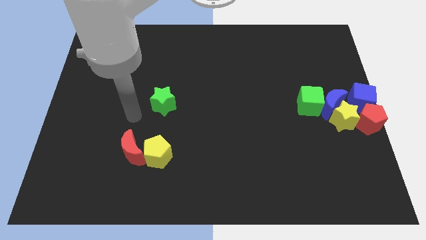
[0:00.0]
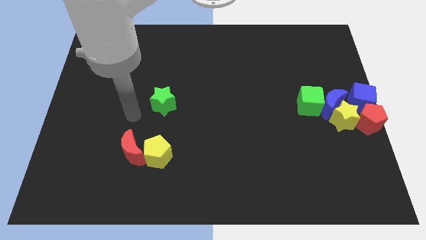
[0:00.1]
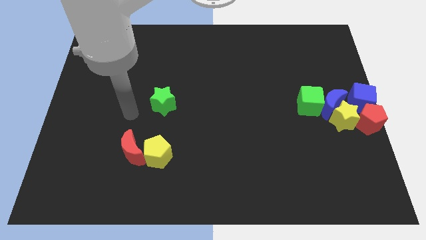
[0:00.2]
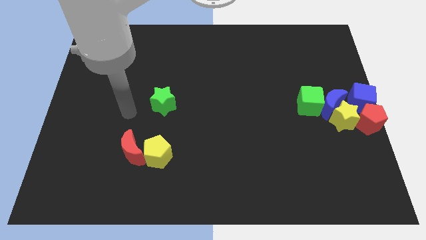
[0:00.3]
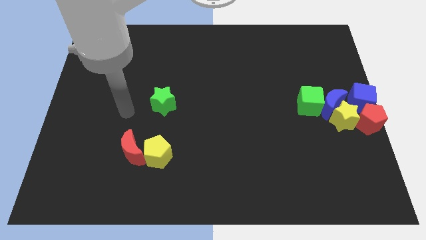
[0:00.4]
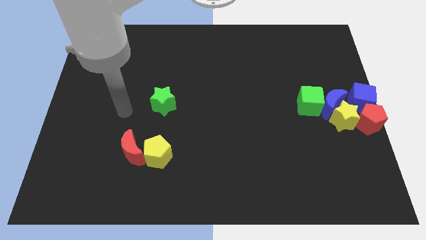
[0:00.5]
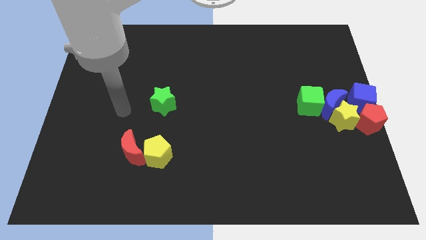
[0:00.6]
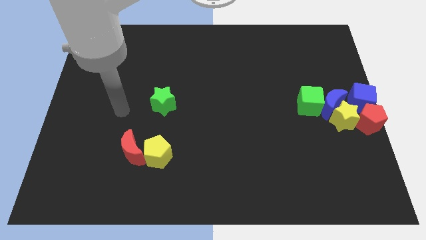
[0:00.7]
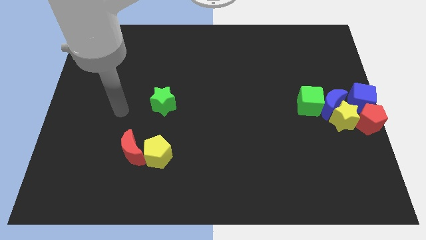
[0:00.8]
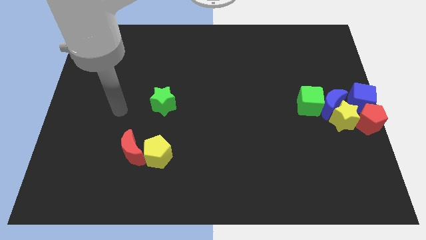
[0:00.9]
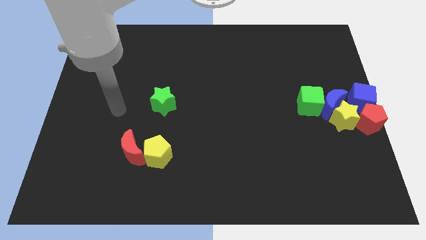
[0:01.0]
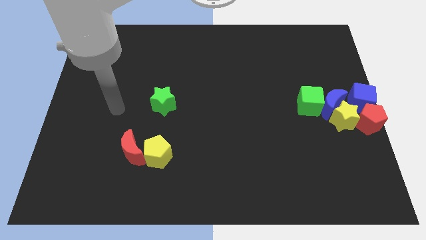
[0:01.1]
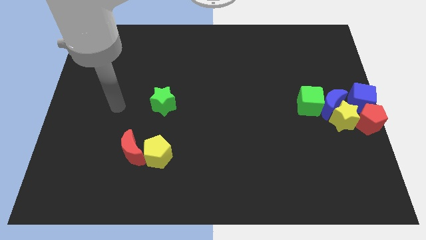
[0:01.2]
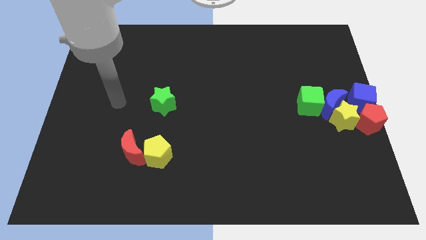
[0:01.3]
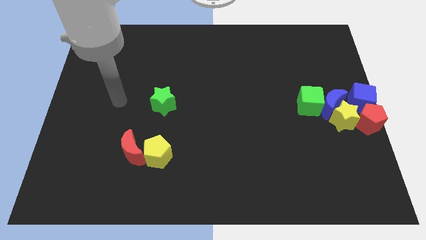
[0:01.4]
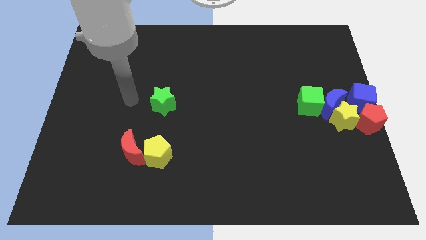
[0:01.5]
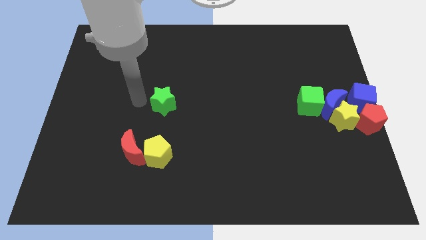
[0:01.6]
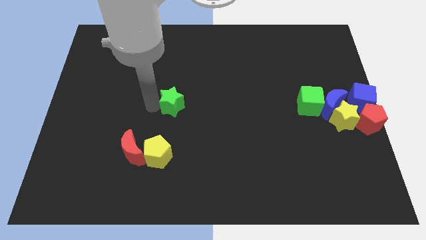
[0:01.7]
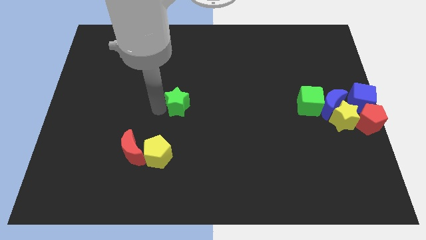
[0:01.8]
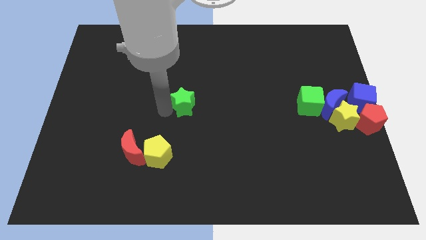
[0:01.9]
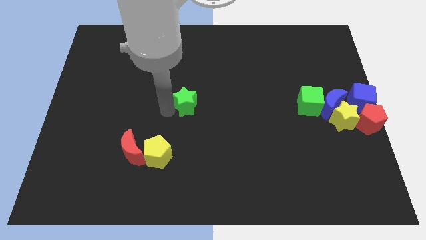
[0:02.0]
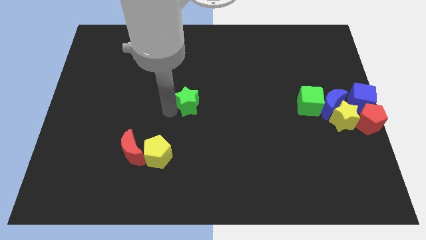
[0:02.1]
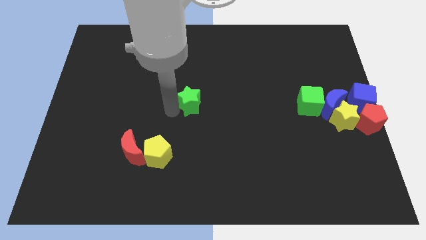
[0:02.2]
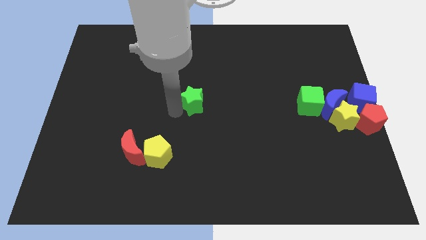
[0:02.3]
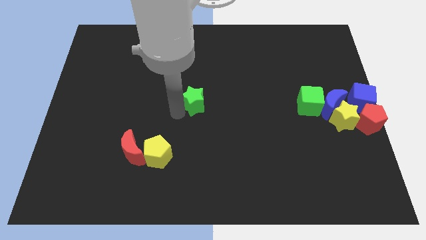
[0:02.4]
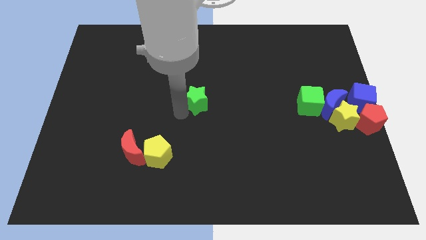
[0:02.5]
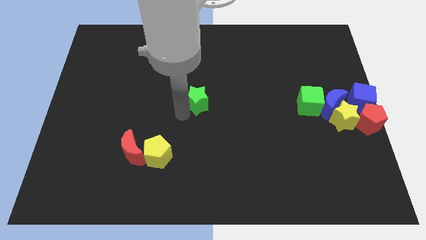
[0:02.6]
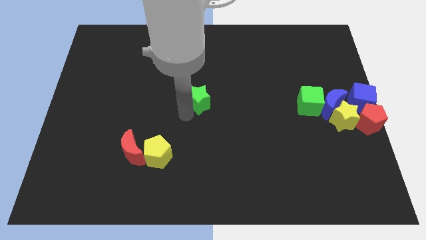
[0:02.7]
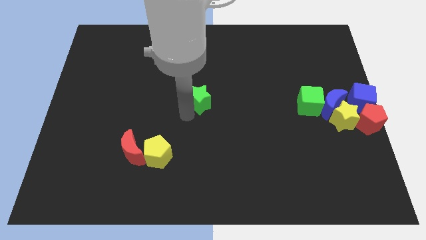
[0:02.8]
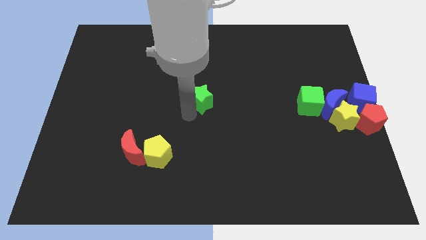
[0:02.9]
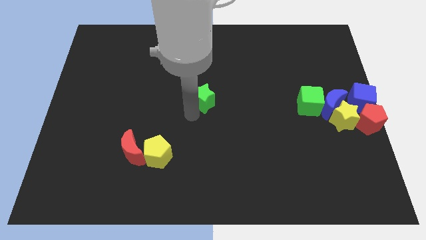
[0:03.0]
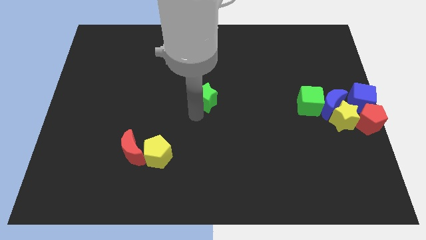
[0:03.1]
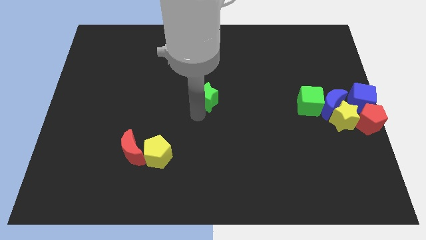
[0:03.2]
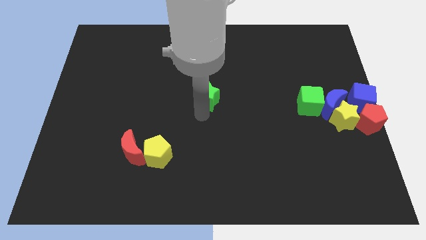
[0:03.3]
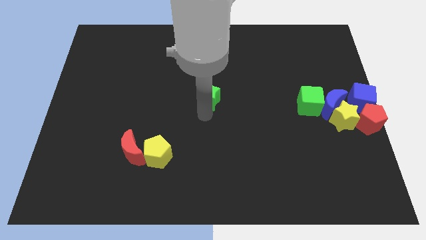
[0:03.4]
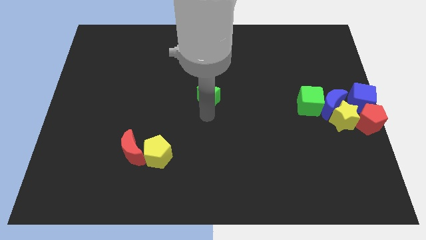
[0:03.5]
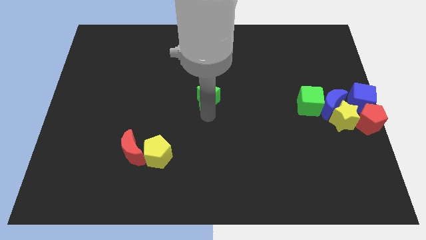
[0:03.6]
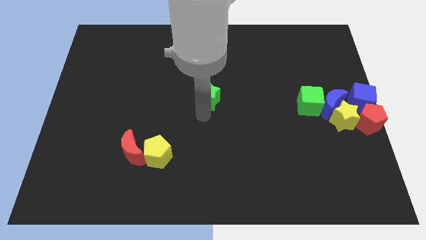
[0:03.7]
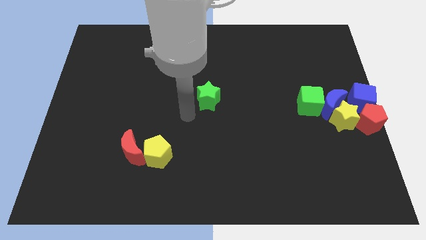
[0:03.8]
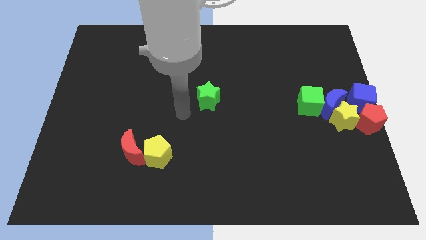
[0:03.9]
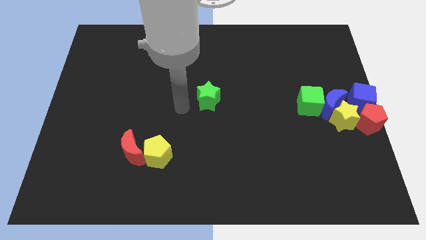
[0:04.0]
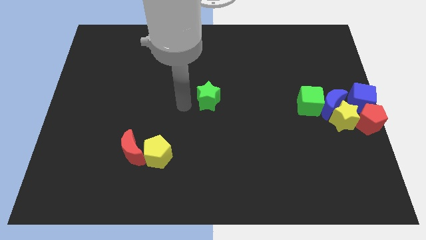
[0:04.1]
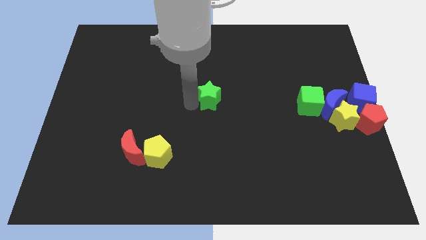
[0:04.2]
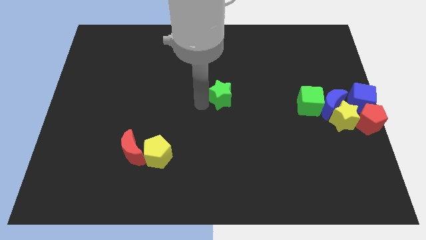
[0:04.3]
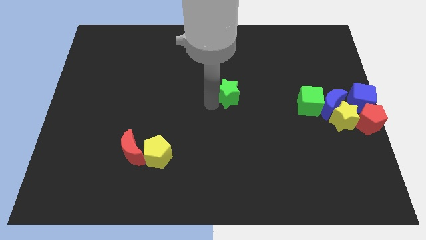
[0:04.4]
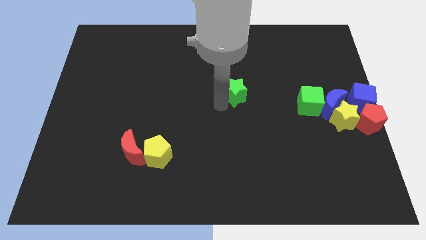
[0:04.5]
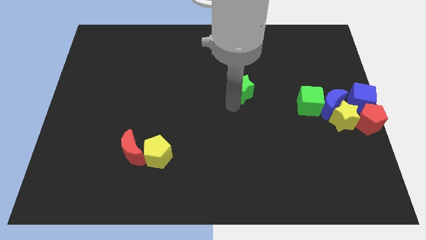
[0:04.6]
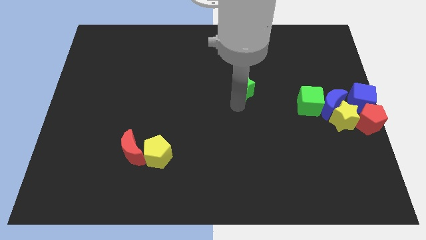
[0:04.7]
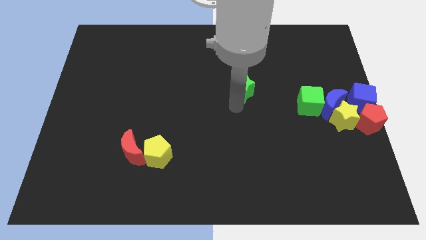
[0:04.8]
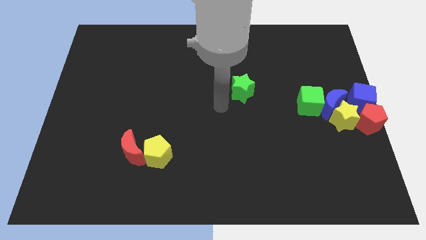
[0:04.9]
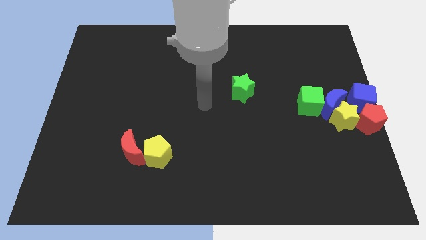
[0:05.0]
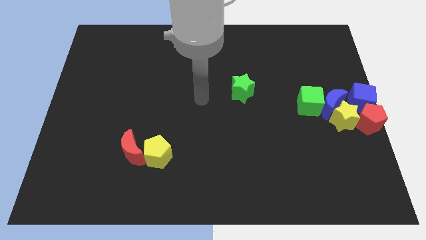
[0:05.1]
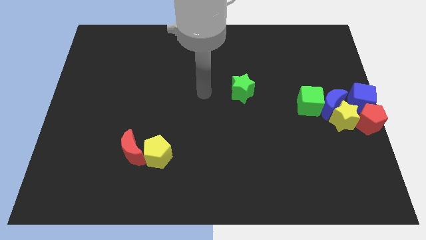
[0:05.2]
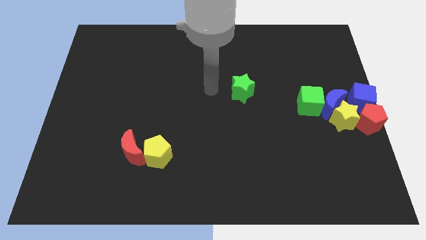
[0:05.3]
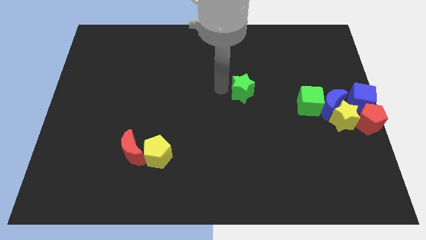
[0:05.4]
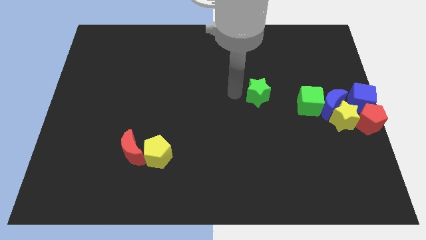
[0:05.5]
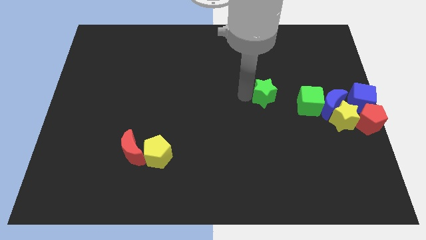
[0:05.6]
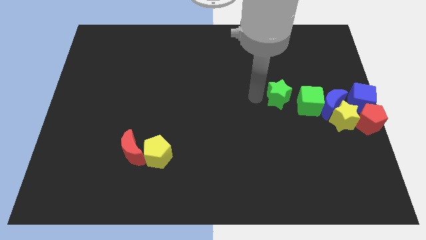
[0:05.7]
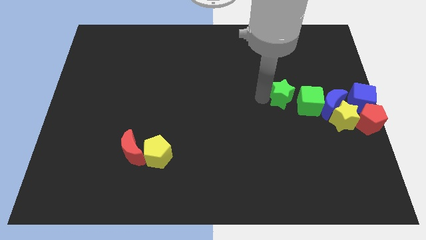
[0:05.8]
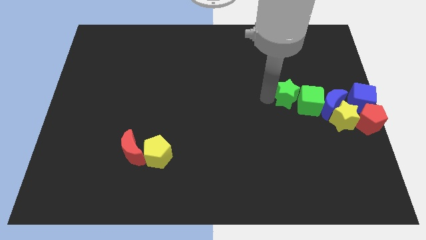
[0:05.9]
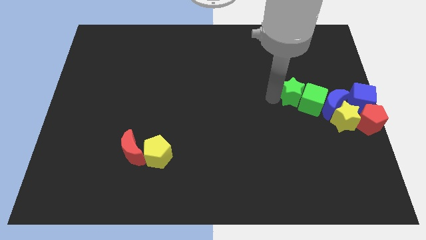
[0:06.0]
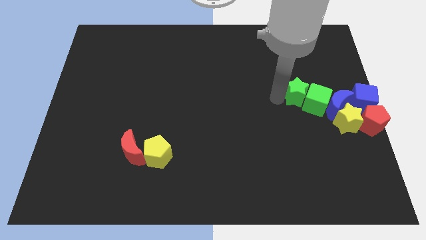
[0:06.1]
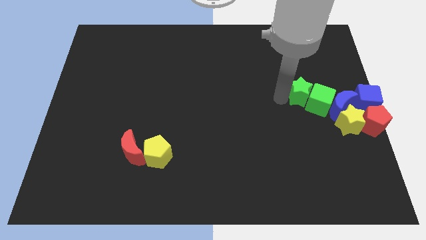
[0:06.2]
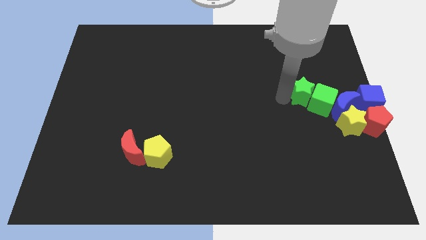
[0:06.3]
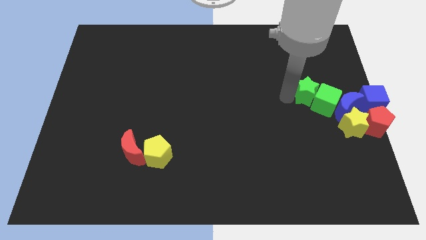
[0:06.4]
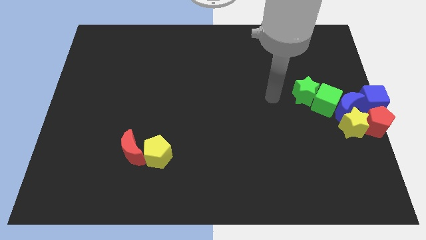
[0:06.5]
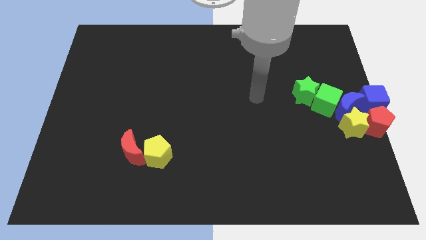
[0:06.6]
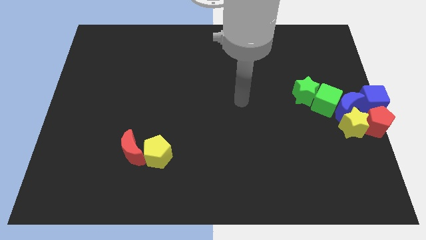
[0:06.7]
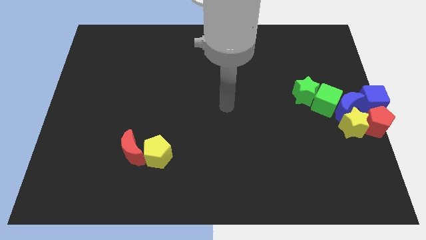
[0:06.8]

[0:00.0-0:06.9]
push the green star into the green cube

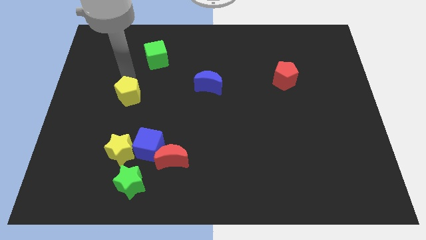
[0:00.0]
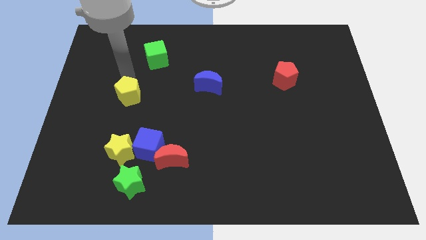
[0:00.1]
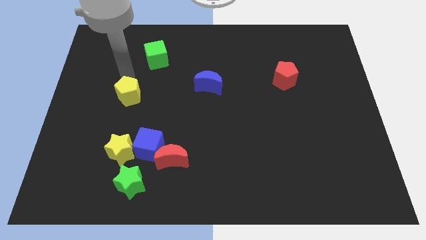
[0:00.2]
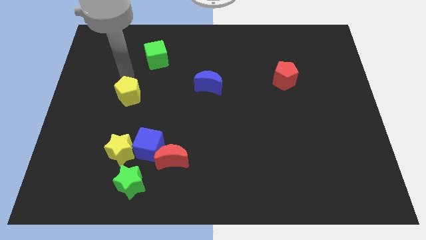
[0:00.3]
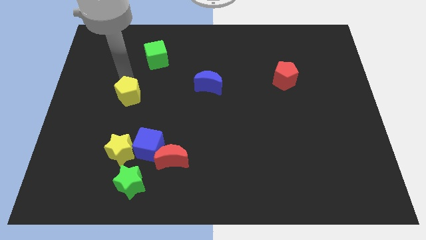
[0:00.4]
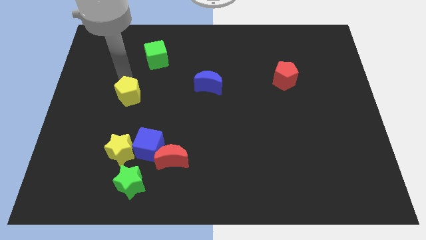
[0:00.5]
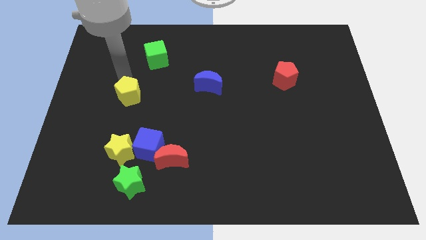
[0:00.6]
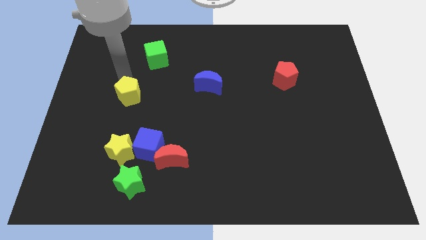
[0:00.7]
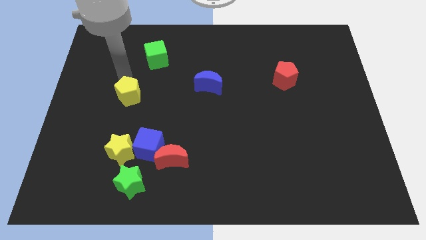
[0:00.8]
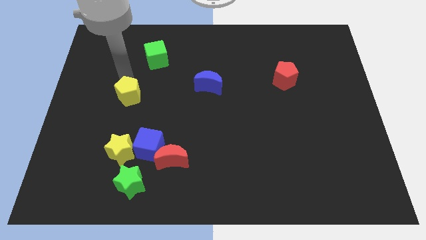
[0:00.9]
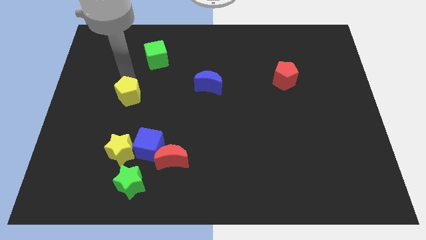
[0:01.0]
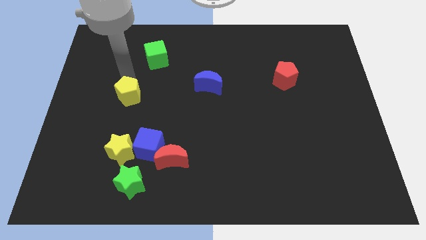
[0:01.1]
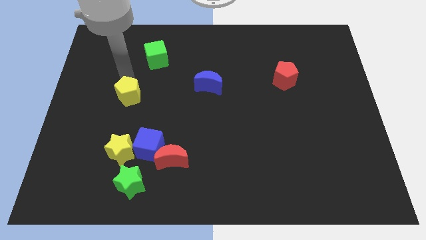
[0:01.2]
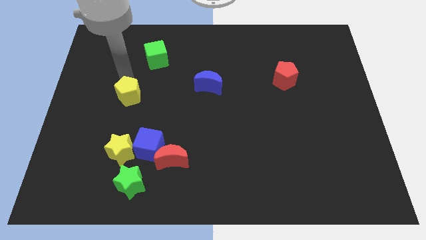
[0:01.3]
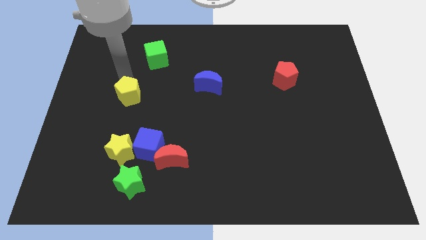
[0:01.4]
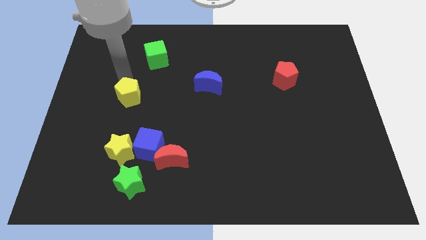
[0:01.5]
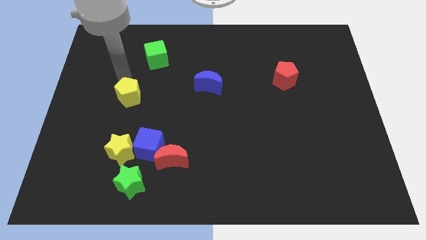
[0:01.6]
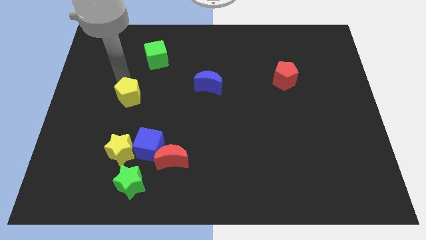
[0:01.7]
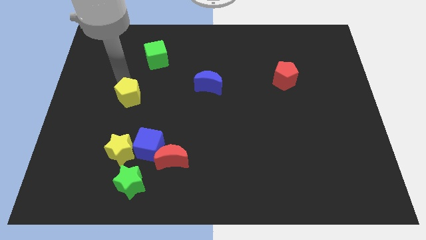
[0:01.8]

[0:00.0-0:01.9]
move your arm to the top of the yellow pentagon
